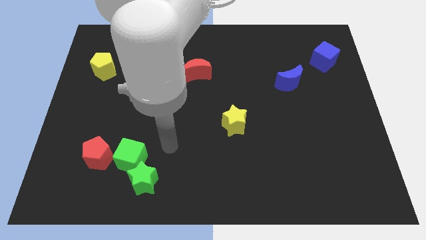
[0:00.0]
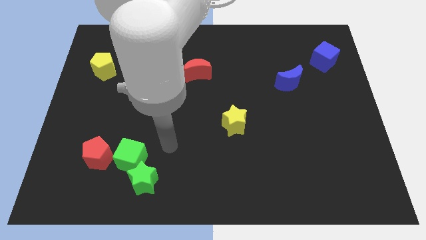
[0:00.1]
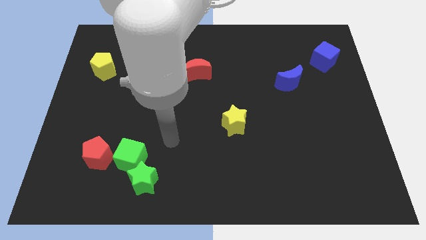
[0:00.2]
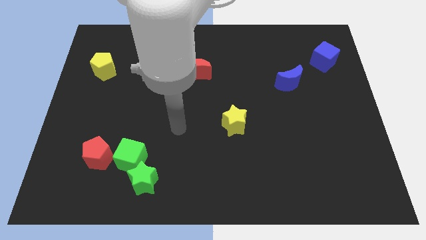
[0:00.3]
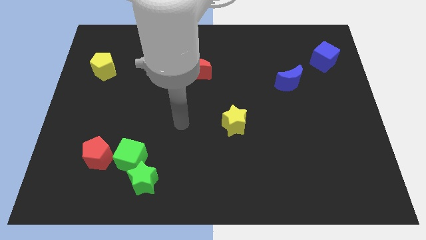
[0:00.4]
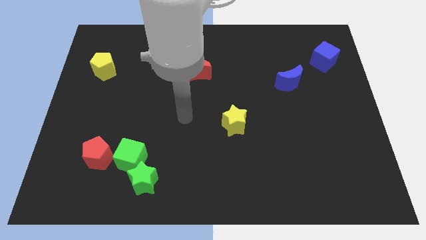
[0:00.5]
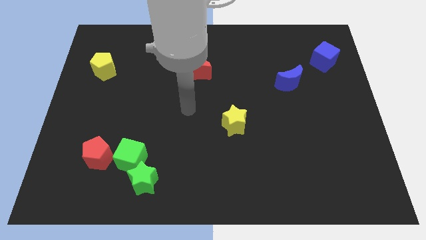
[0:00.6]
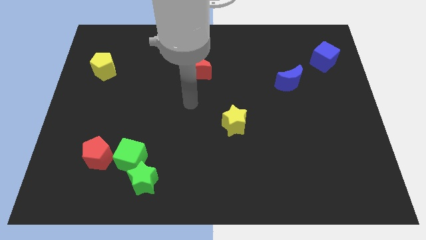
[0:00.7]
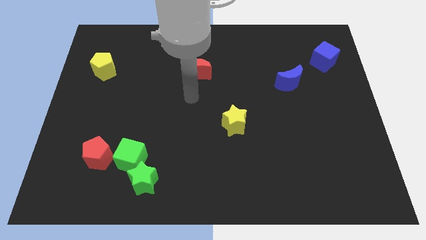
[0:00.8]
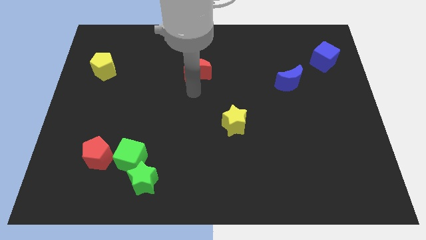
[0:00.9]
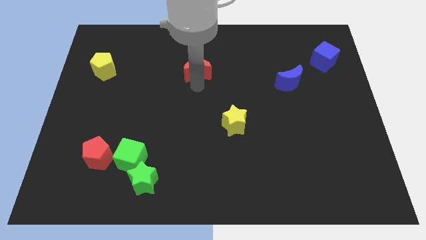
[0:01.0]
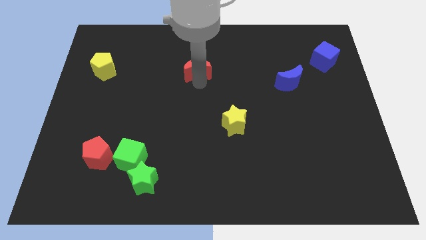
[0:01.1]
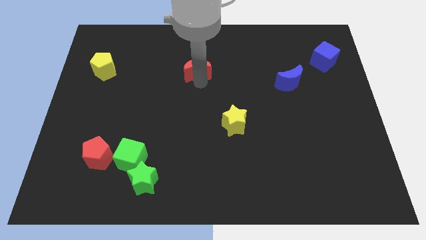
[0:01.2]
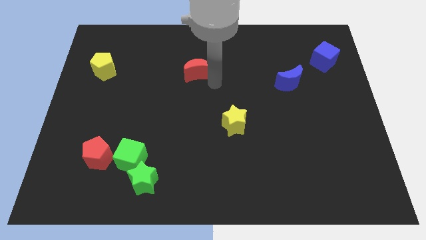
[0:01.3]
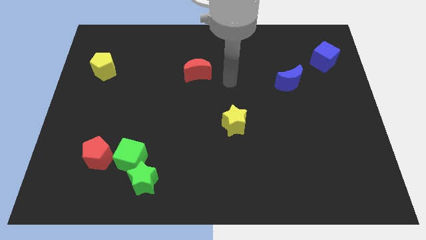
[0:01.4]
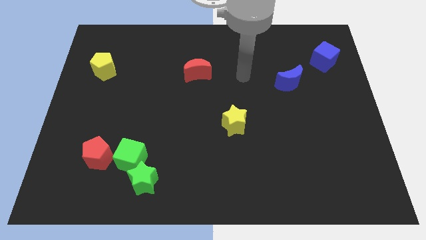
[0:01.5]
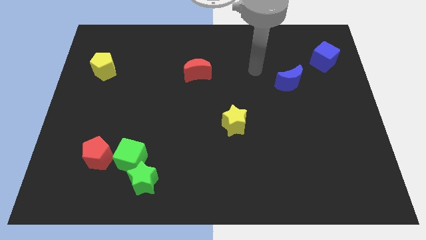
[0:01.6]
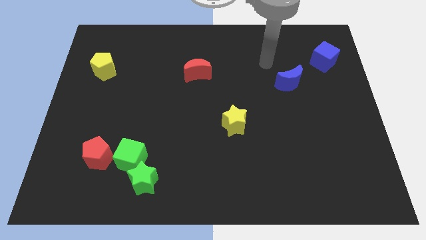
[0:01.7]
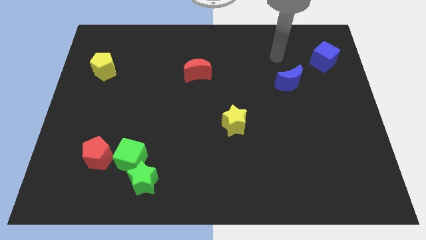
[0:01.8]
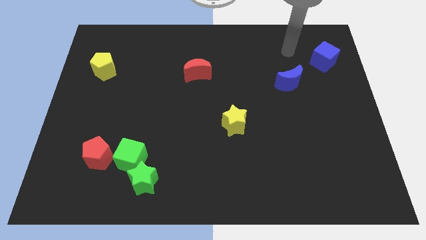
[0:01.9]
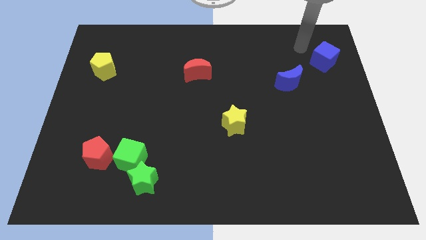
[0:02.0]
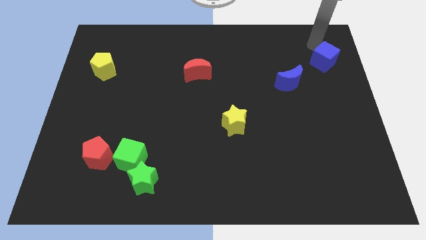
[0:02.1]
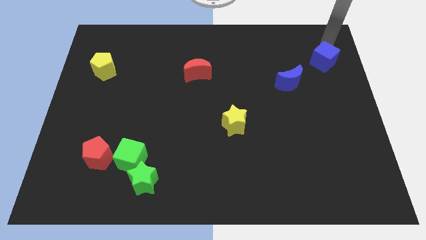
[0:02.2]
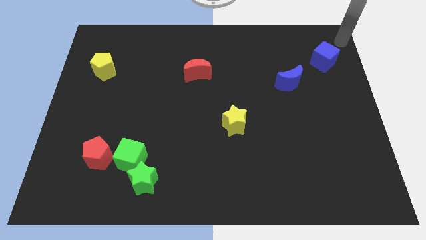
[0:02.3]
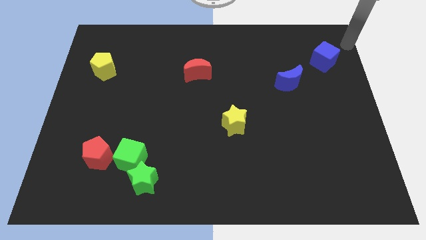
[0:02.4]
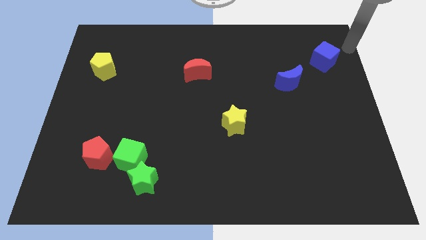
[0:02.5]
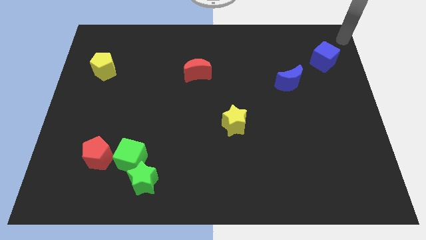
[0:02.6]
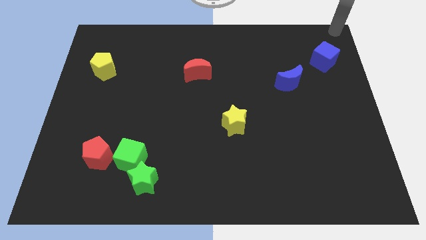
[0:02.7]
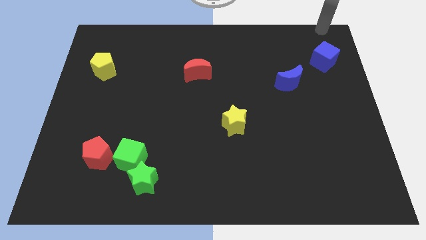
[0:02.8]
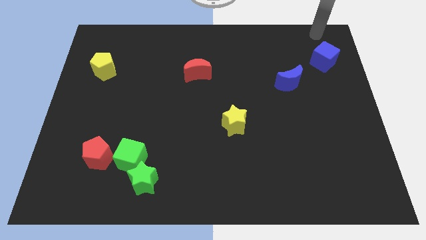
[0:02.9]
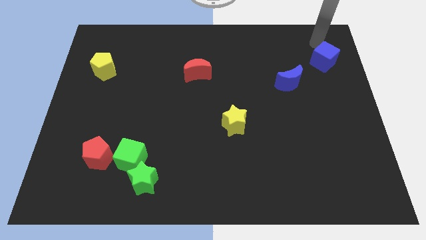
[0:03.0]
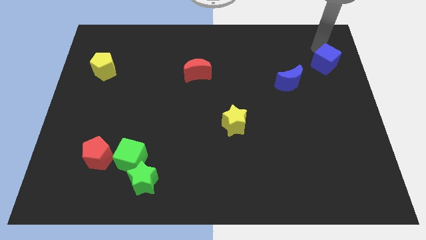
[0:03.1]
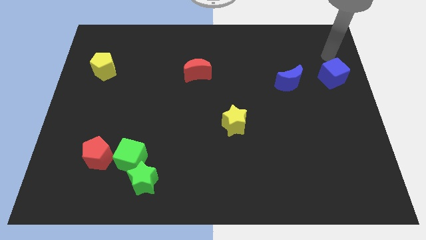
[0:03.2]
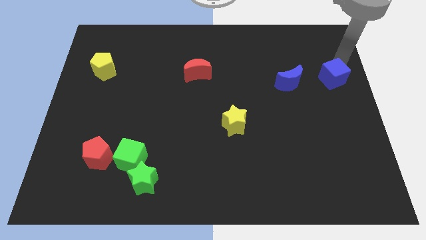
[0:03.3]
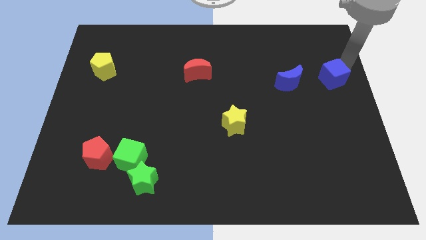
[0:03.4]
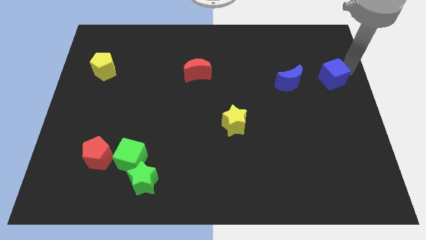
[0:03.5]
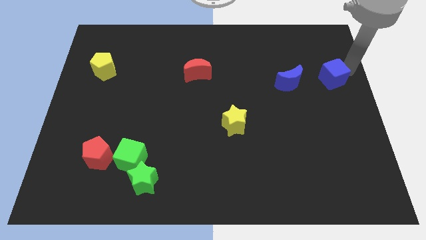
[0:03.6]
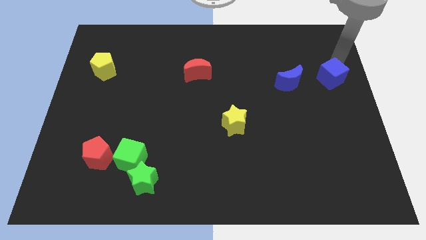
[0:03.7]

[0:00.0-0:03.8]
place the blue cube to the right of the blue moon

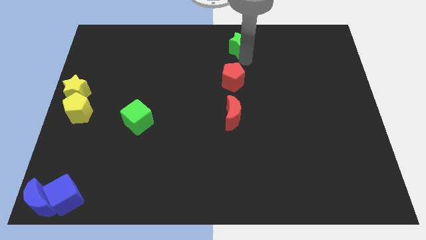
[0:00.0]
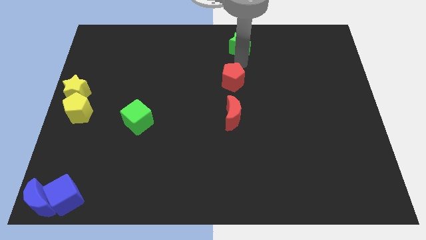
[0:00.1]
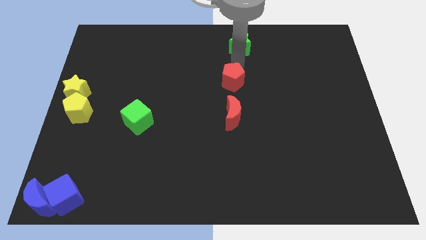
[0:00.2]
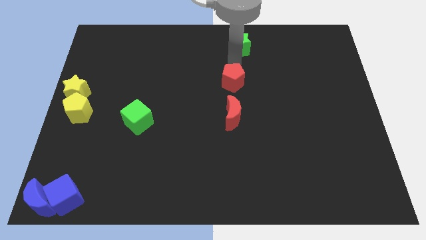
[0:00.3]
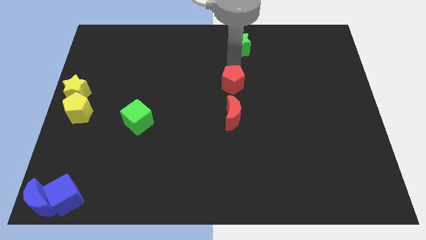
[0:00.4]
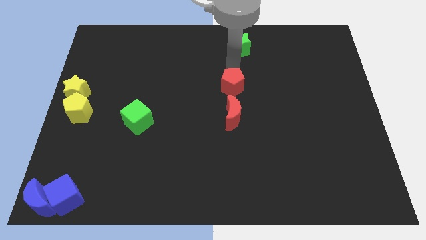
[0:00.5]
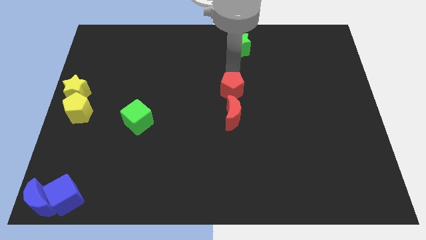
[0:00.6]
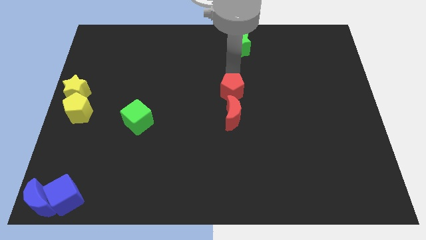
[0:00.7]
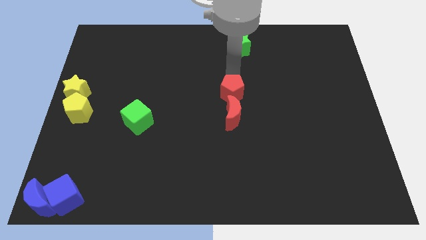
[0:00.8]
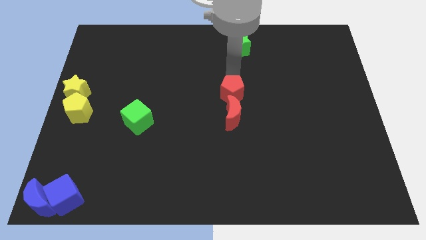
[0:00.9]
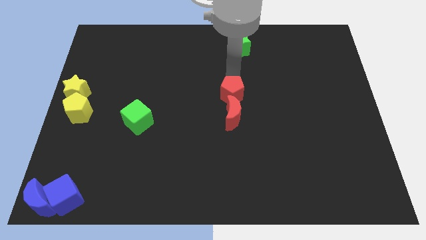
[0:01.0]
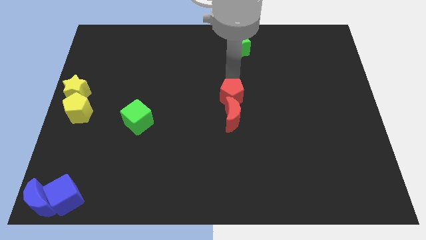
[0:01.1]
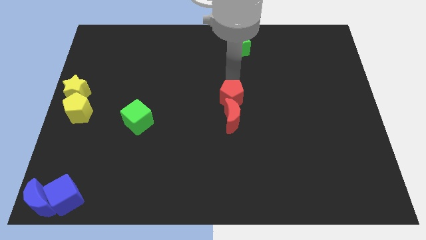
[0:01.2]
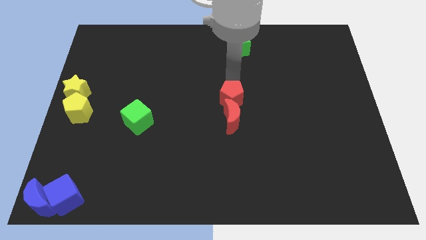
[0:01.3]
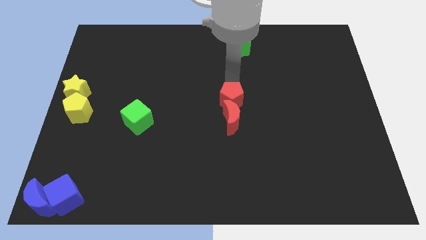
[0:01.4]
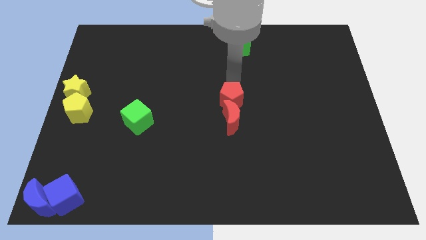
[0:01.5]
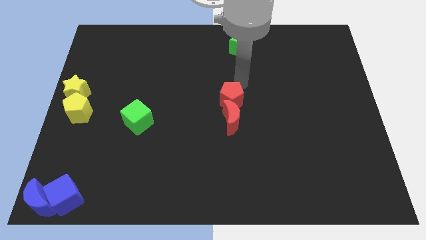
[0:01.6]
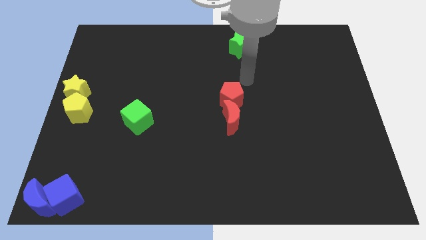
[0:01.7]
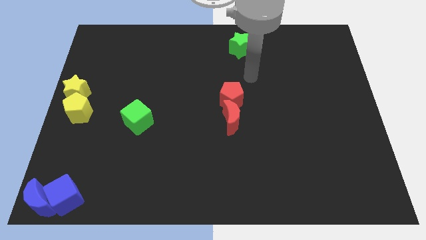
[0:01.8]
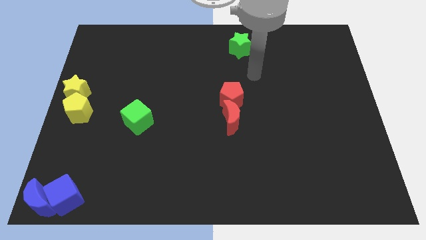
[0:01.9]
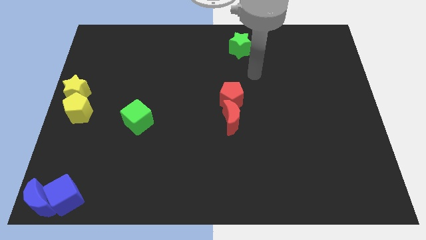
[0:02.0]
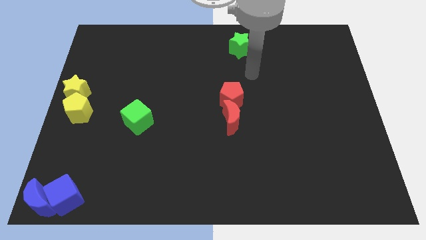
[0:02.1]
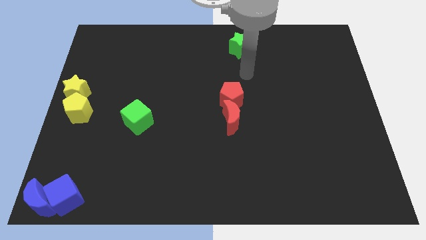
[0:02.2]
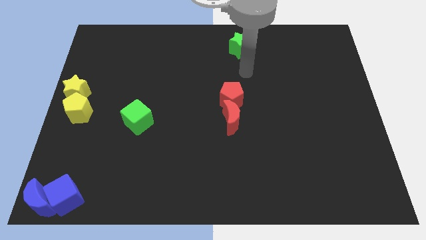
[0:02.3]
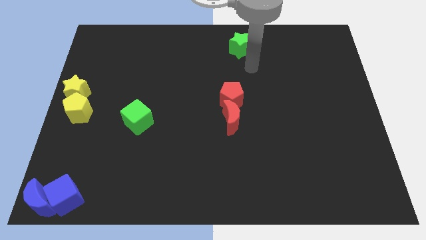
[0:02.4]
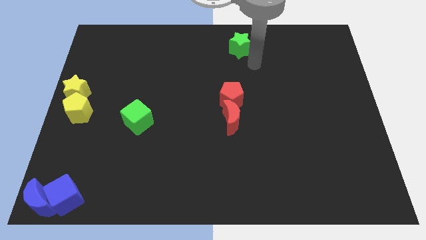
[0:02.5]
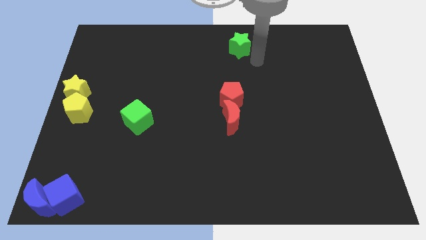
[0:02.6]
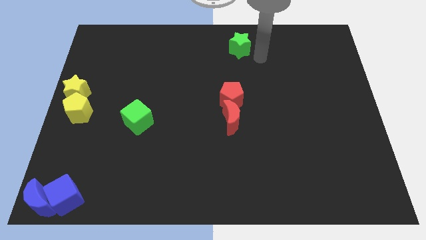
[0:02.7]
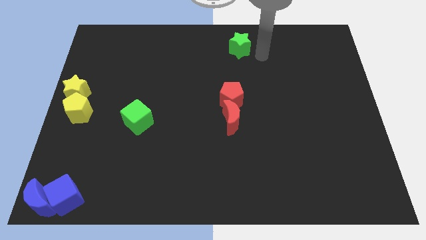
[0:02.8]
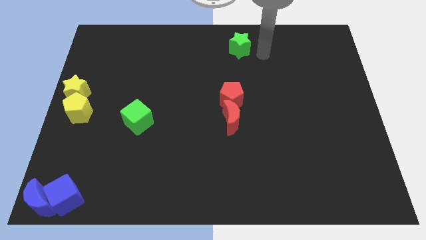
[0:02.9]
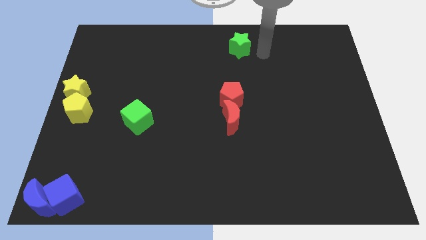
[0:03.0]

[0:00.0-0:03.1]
move the red pentagon into the red moon

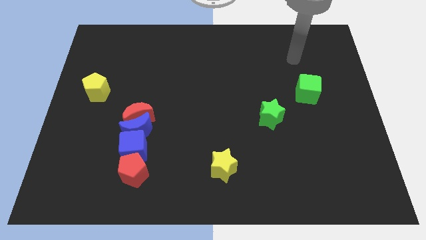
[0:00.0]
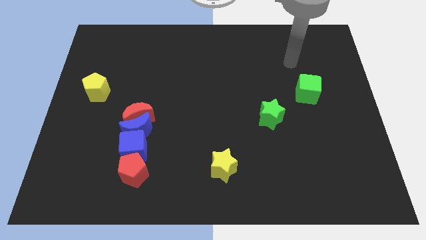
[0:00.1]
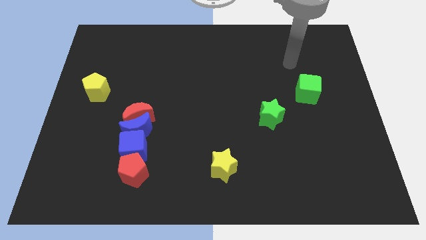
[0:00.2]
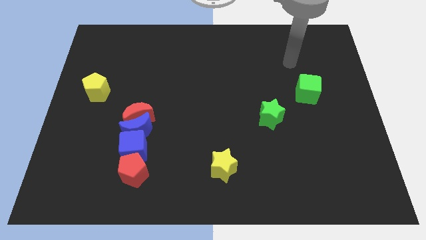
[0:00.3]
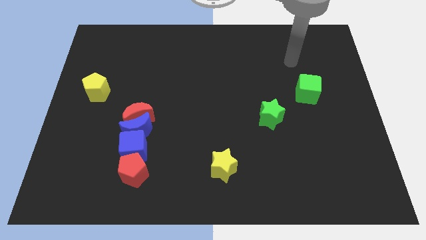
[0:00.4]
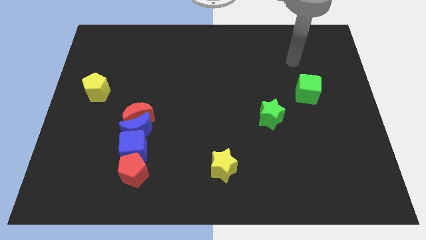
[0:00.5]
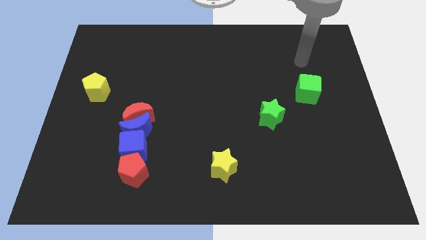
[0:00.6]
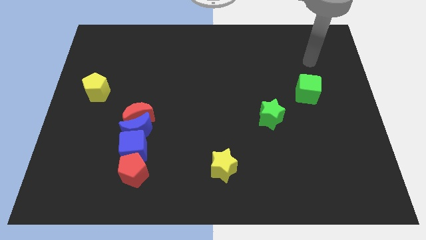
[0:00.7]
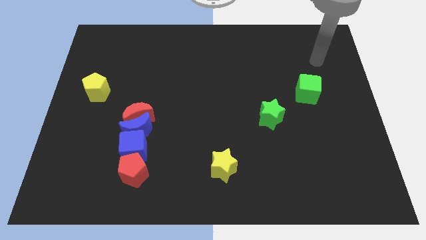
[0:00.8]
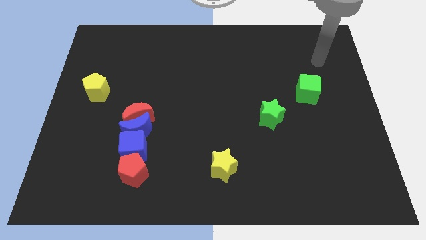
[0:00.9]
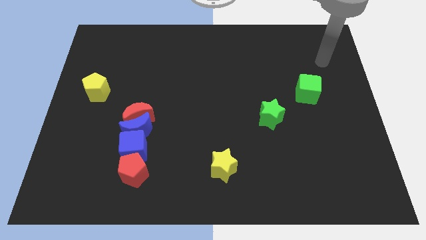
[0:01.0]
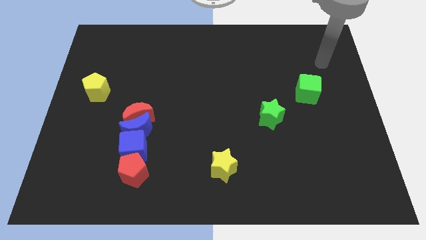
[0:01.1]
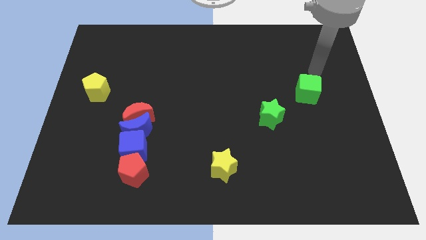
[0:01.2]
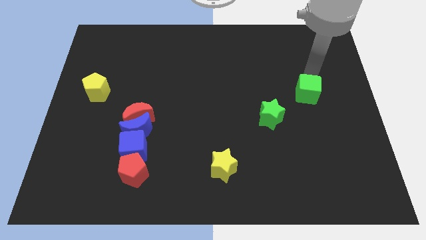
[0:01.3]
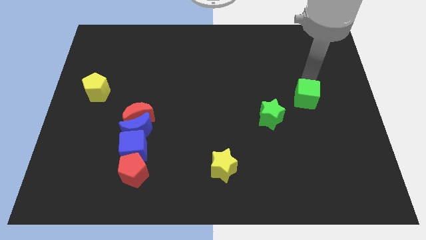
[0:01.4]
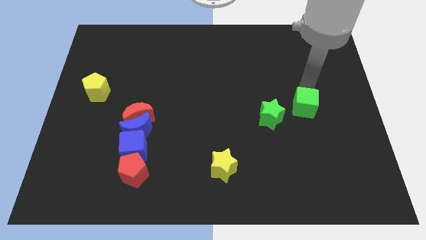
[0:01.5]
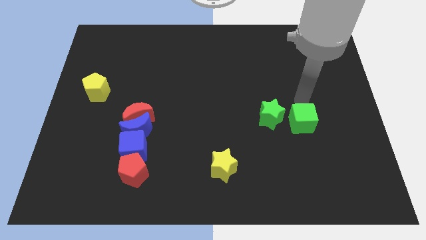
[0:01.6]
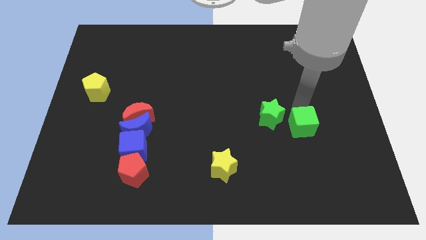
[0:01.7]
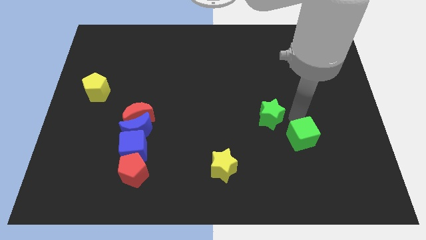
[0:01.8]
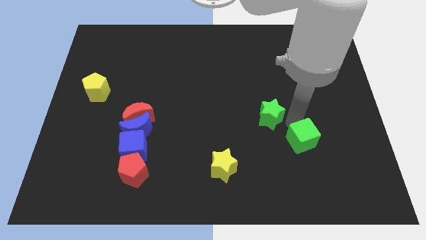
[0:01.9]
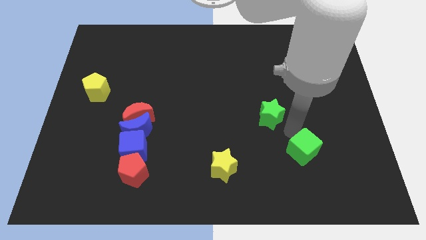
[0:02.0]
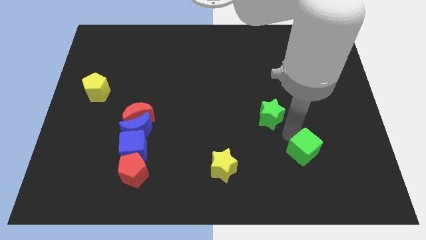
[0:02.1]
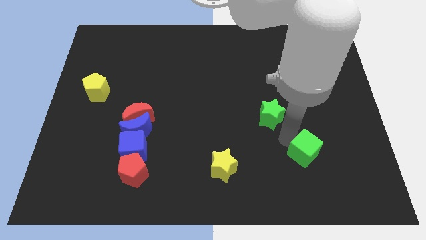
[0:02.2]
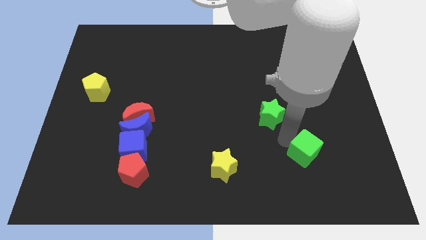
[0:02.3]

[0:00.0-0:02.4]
push the green cube diagonal to the right of green star
